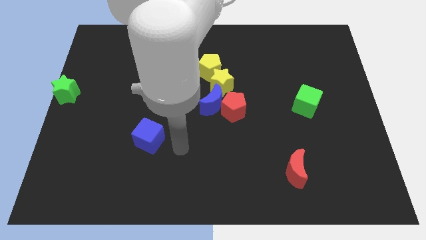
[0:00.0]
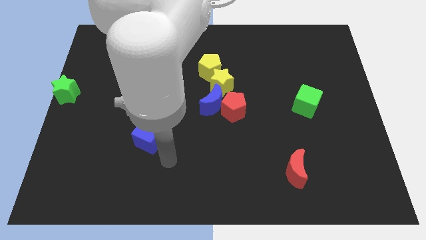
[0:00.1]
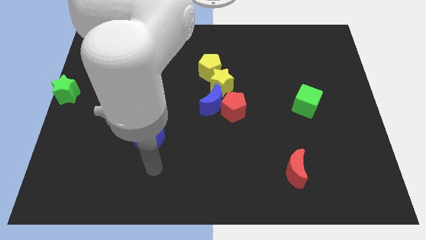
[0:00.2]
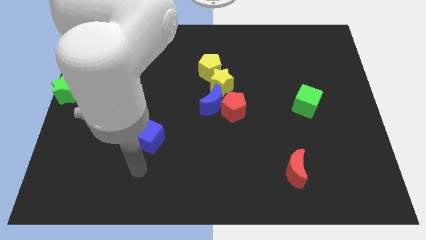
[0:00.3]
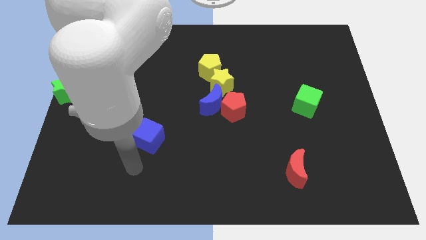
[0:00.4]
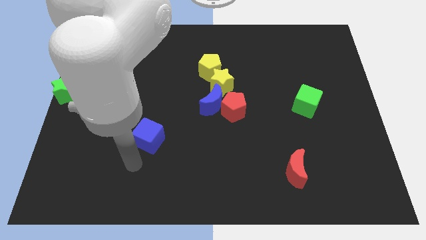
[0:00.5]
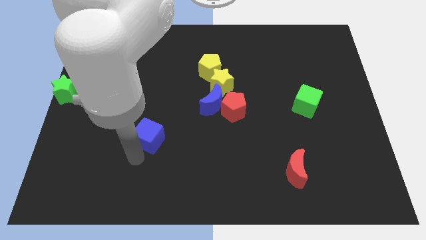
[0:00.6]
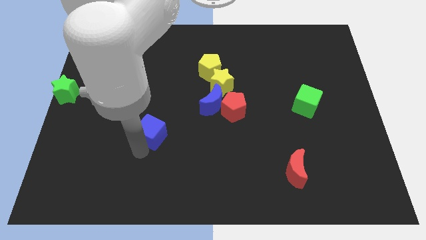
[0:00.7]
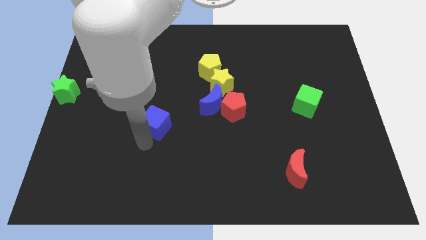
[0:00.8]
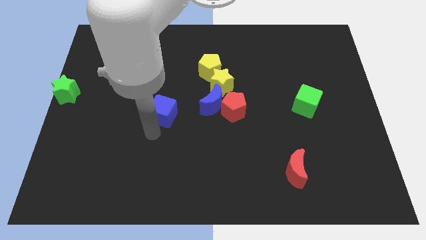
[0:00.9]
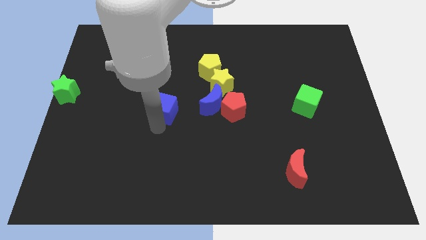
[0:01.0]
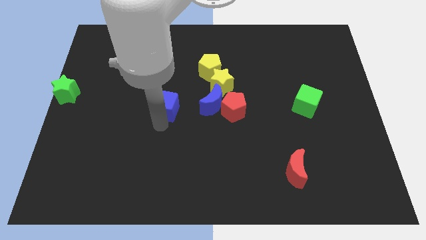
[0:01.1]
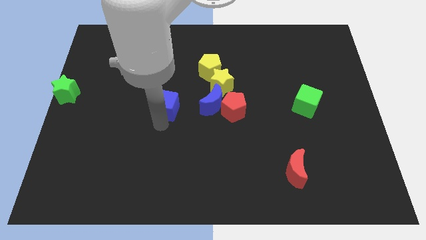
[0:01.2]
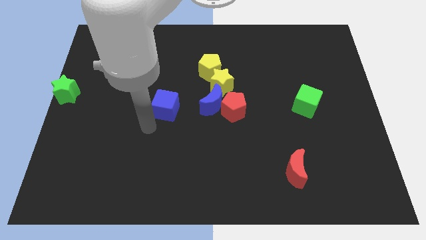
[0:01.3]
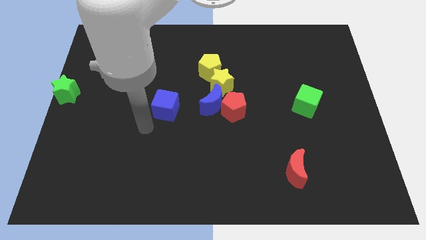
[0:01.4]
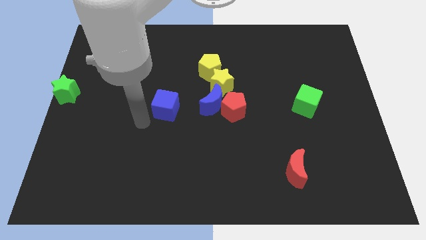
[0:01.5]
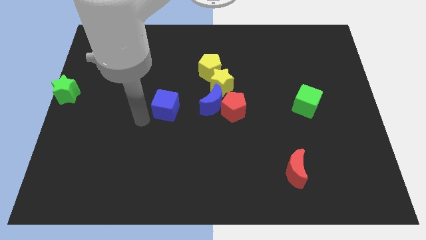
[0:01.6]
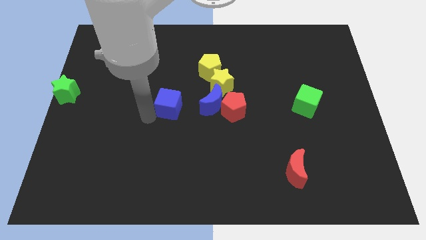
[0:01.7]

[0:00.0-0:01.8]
push the blue cube upwards

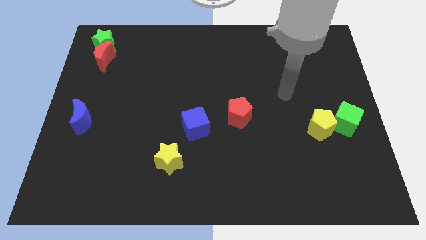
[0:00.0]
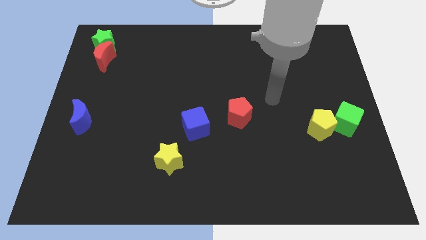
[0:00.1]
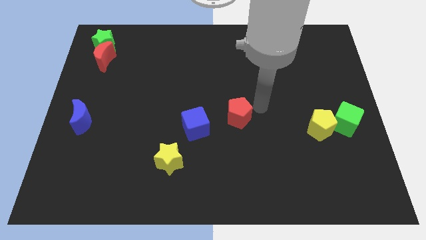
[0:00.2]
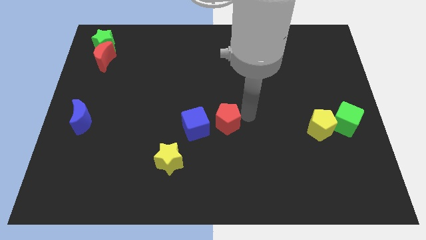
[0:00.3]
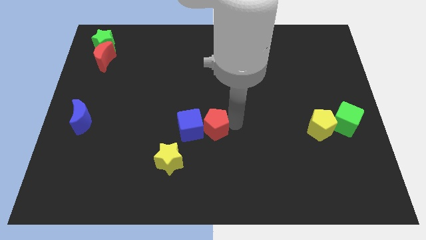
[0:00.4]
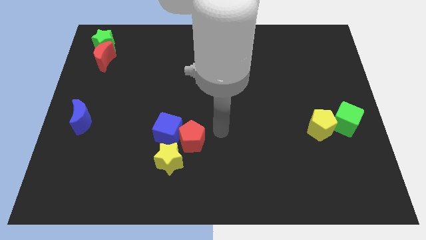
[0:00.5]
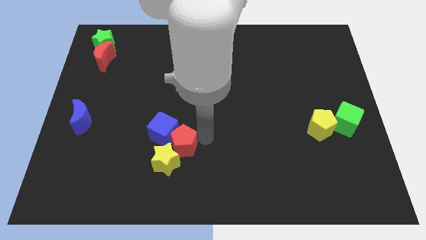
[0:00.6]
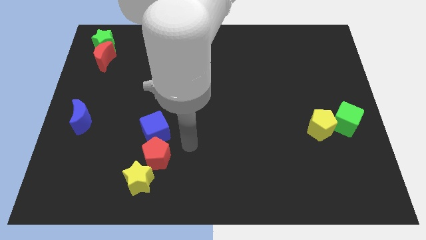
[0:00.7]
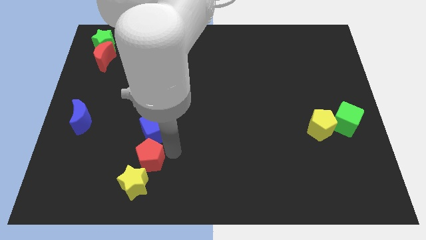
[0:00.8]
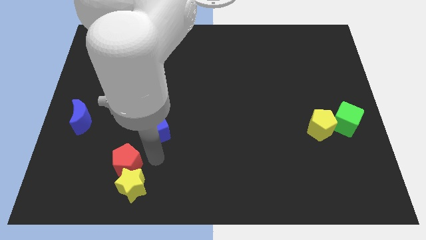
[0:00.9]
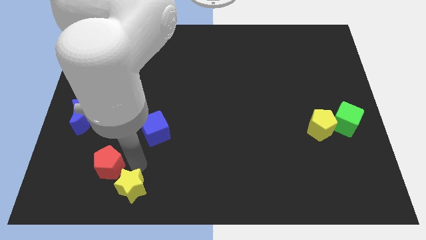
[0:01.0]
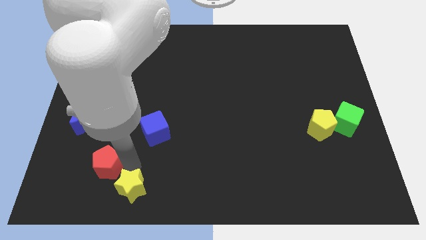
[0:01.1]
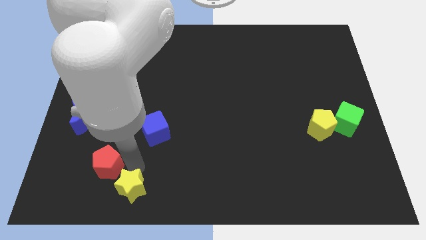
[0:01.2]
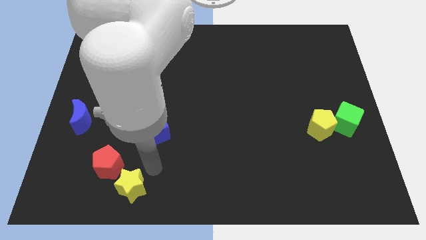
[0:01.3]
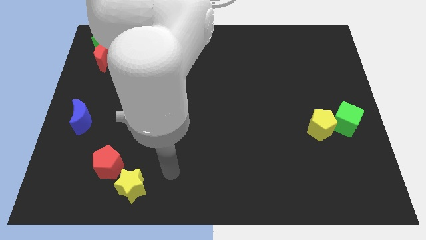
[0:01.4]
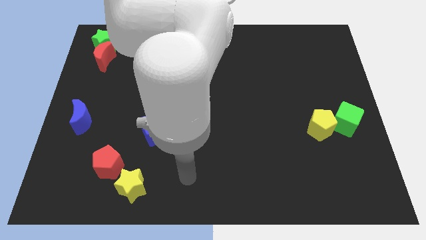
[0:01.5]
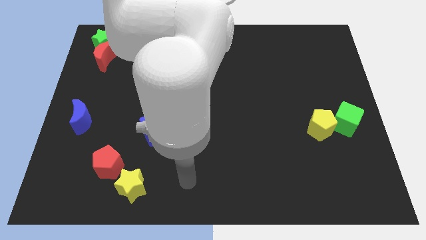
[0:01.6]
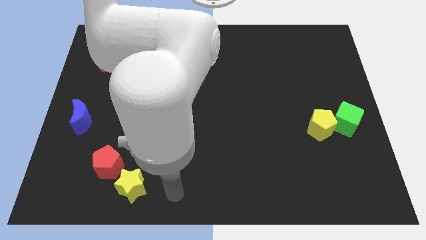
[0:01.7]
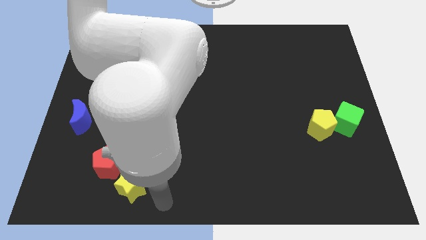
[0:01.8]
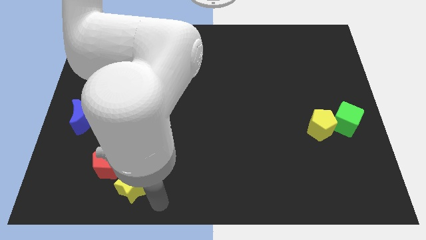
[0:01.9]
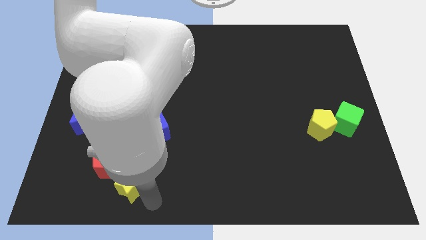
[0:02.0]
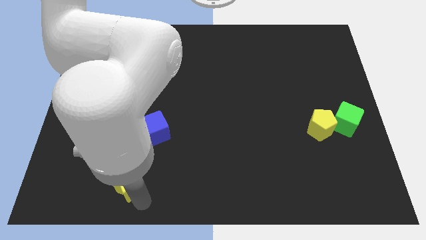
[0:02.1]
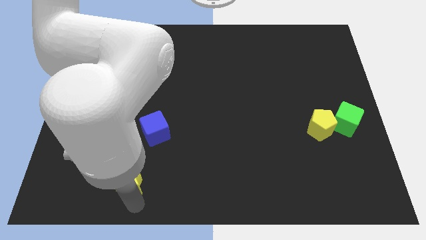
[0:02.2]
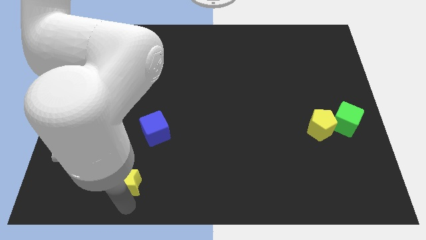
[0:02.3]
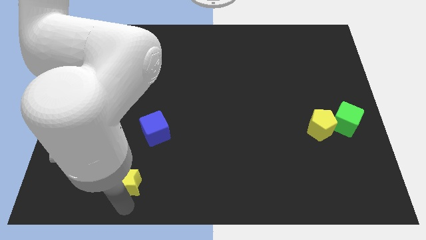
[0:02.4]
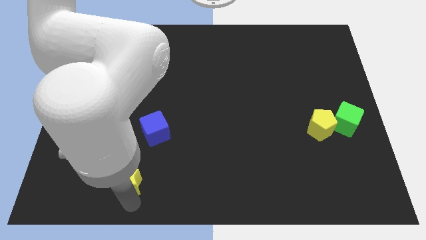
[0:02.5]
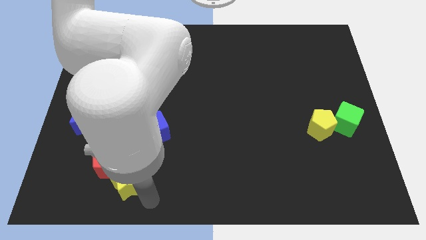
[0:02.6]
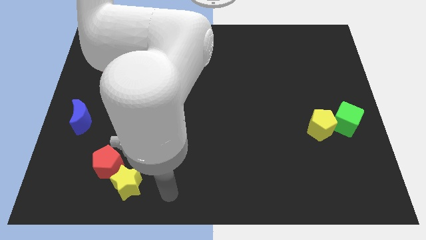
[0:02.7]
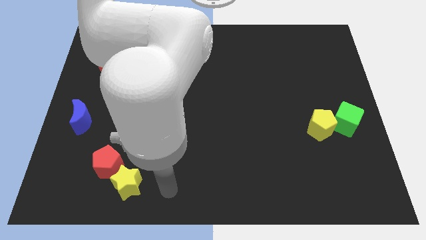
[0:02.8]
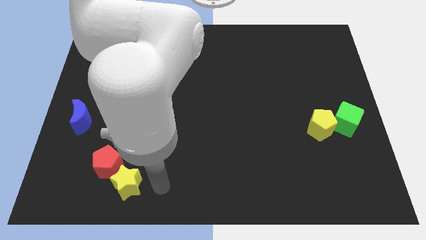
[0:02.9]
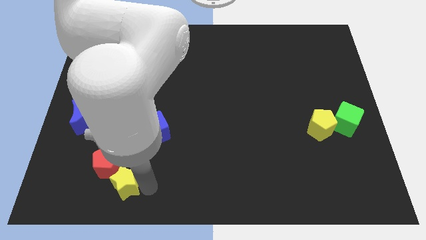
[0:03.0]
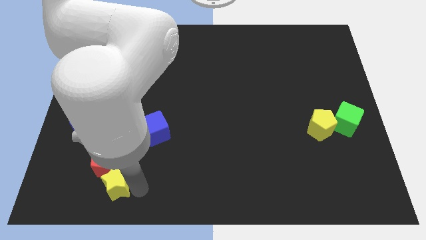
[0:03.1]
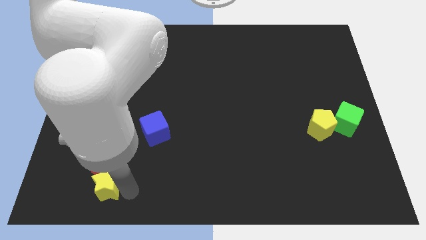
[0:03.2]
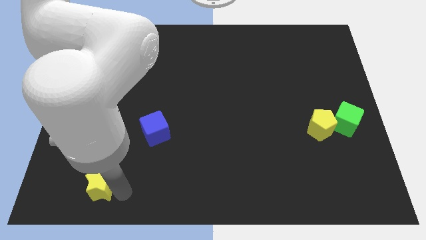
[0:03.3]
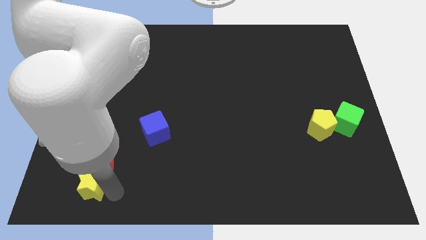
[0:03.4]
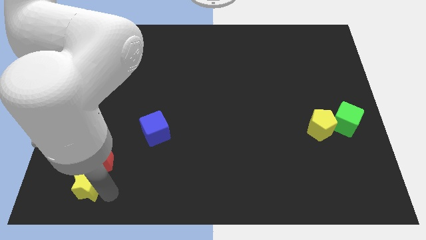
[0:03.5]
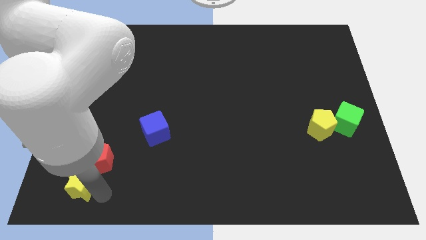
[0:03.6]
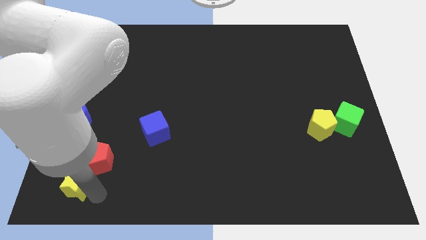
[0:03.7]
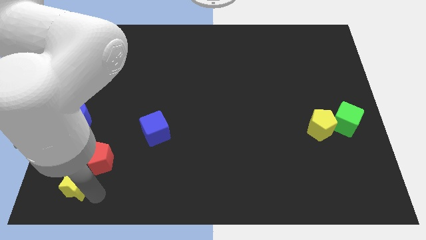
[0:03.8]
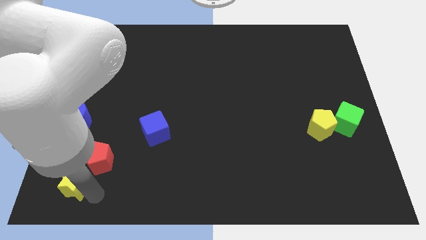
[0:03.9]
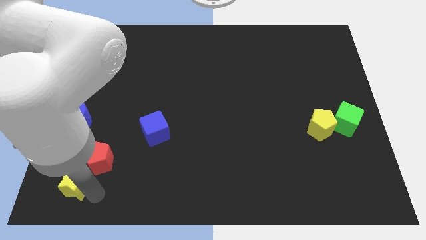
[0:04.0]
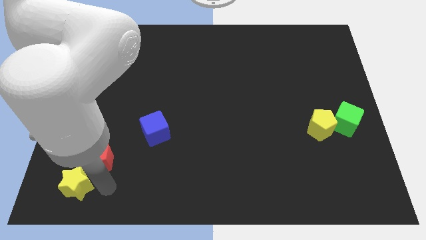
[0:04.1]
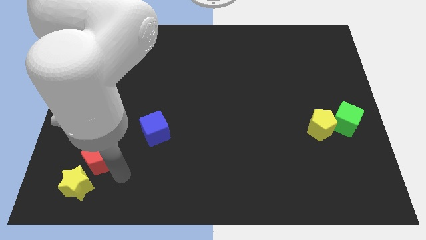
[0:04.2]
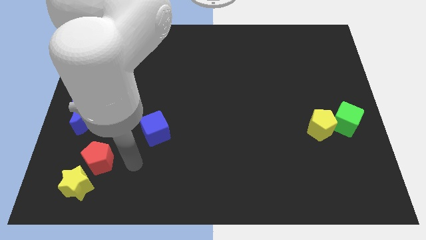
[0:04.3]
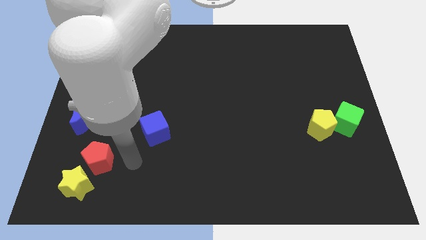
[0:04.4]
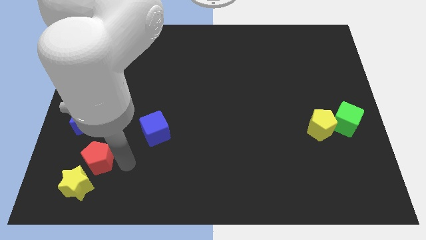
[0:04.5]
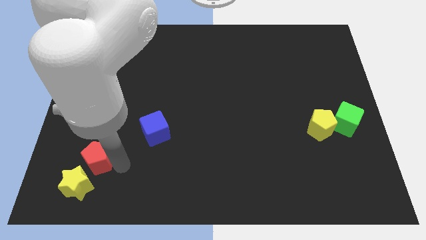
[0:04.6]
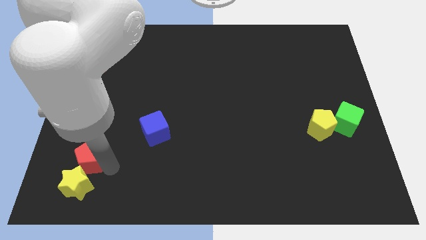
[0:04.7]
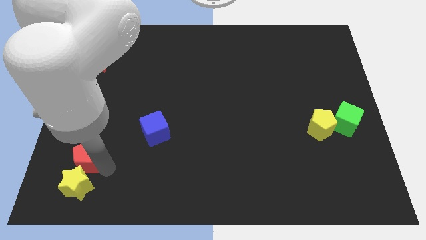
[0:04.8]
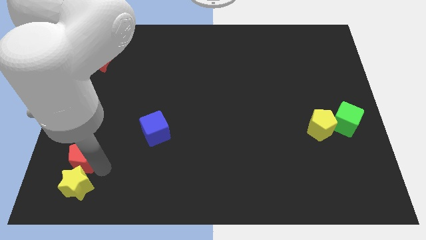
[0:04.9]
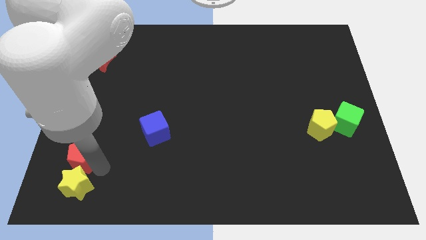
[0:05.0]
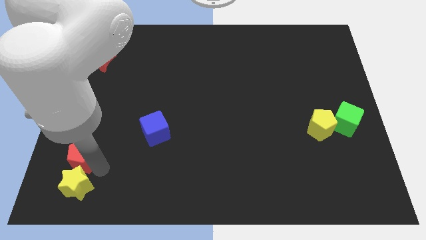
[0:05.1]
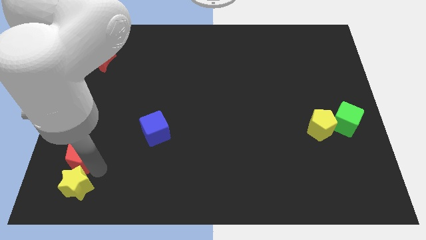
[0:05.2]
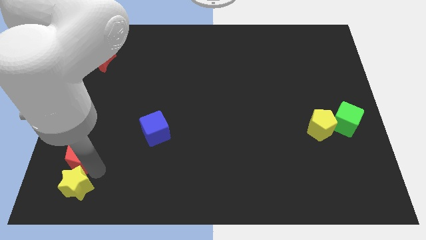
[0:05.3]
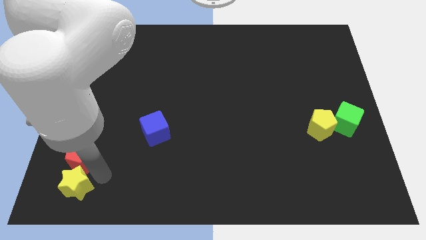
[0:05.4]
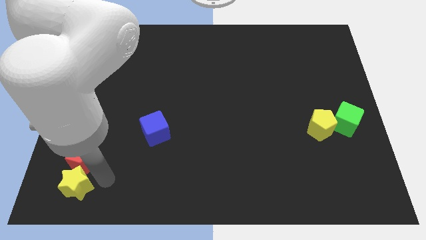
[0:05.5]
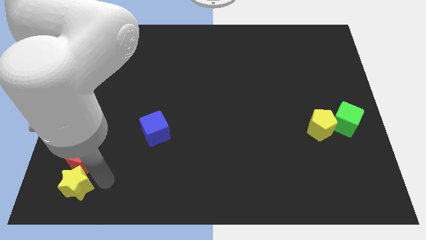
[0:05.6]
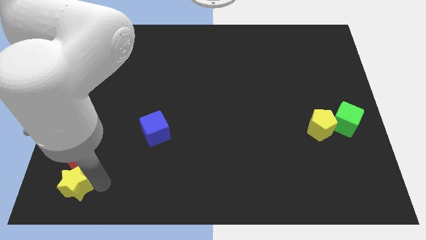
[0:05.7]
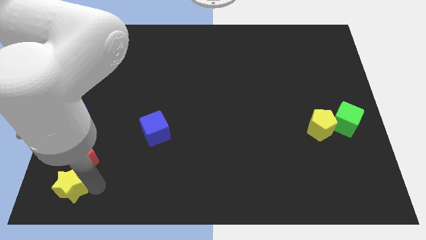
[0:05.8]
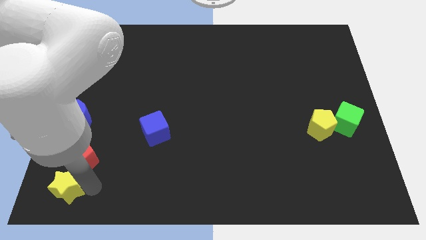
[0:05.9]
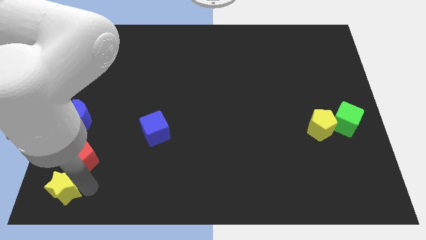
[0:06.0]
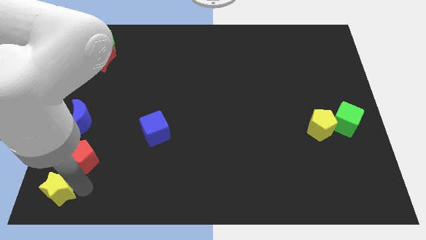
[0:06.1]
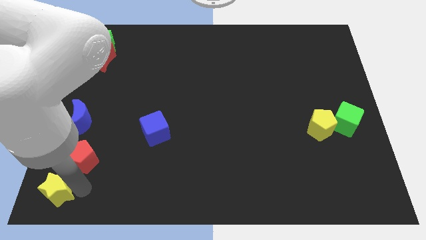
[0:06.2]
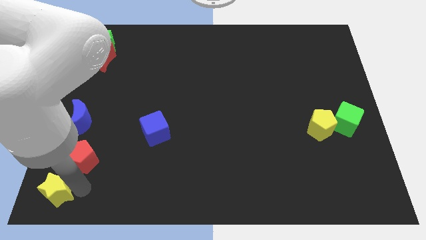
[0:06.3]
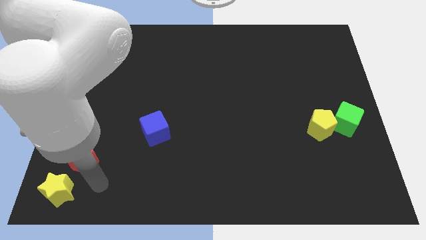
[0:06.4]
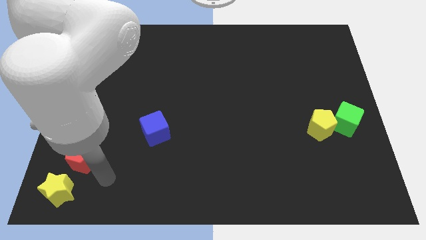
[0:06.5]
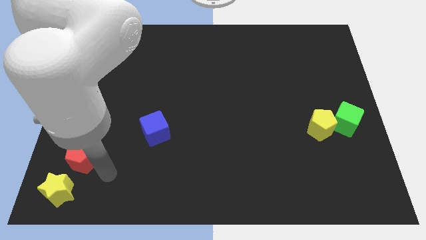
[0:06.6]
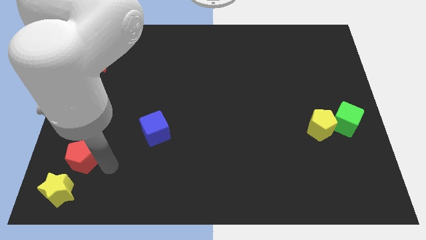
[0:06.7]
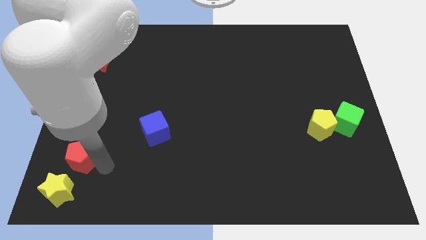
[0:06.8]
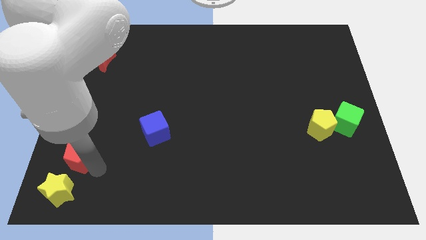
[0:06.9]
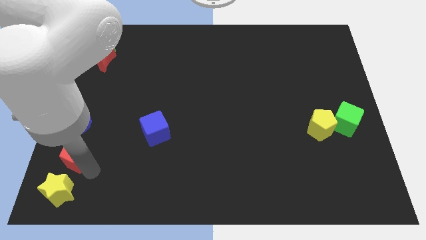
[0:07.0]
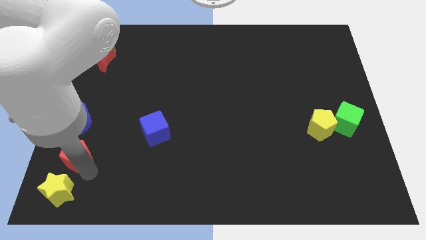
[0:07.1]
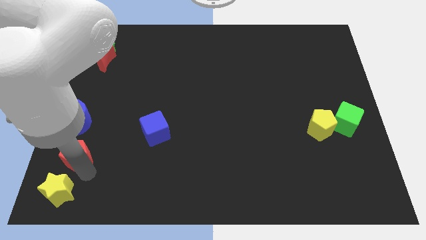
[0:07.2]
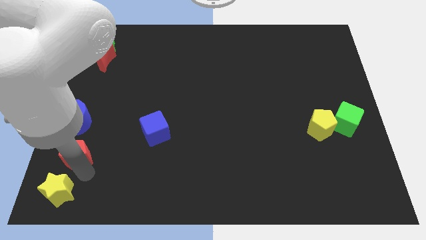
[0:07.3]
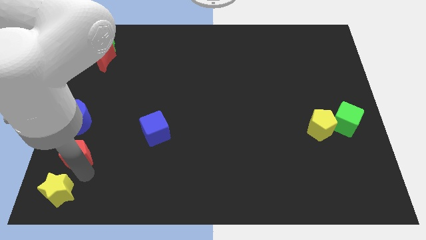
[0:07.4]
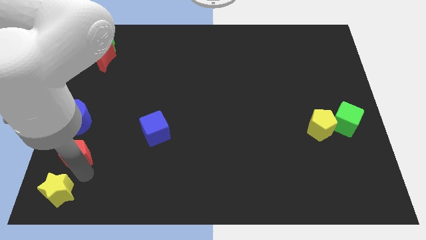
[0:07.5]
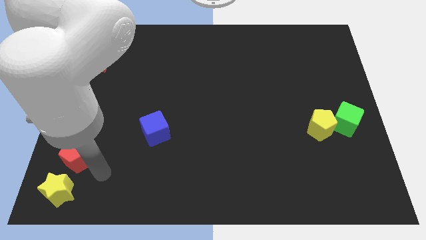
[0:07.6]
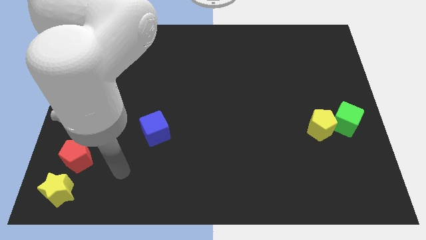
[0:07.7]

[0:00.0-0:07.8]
form a vertical line with red pentagon and yellow star below the blue moon
